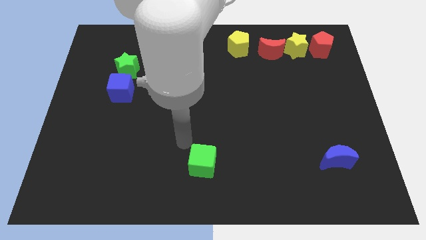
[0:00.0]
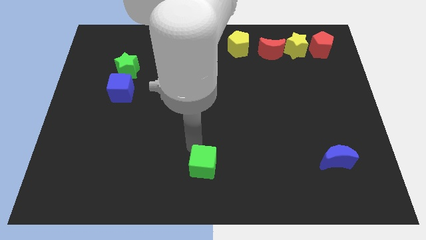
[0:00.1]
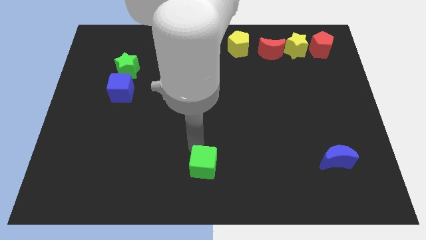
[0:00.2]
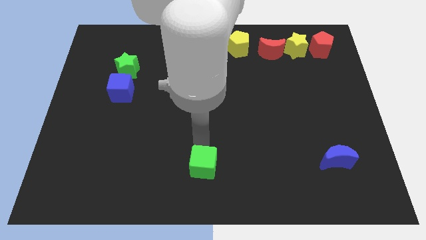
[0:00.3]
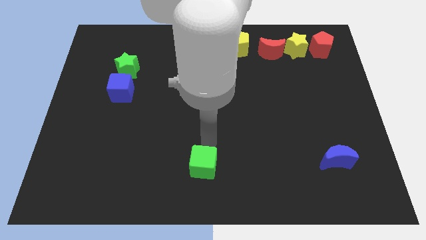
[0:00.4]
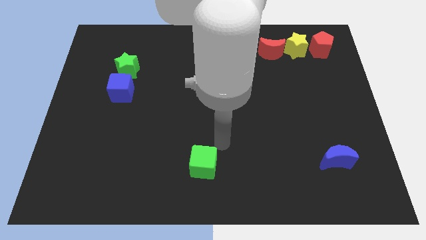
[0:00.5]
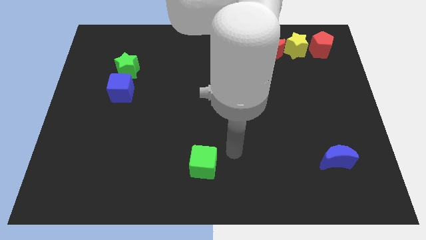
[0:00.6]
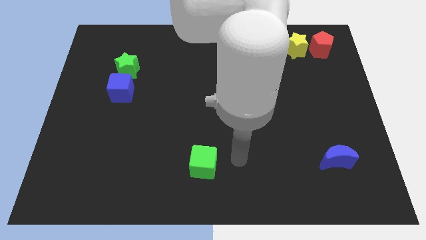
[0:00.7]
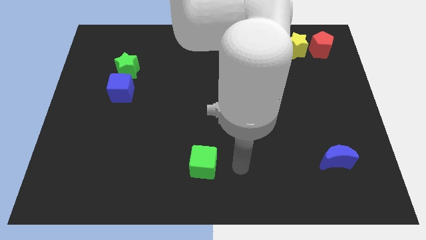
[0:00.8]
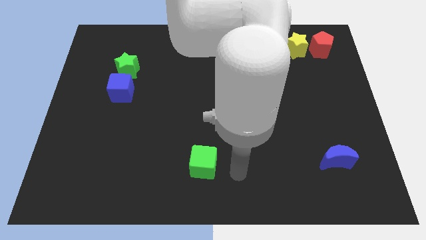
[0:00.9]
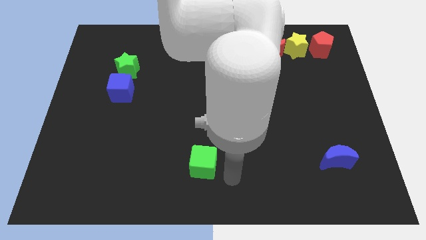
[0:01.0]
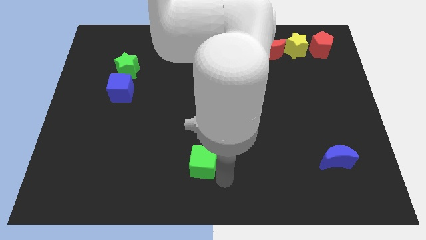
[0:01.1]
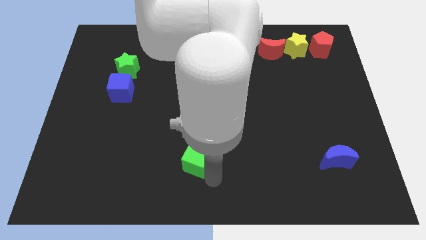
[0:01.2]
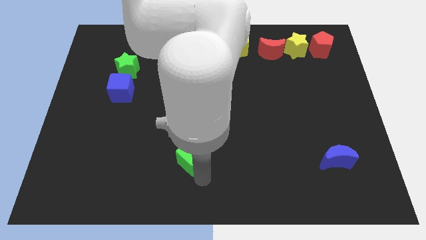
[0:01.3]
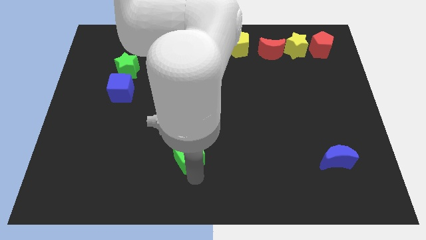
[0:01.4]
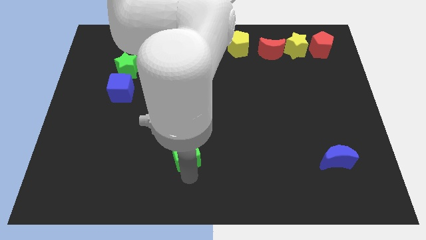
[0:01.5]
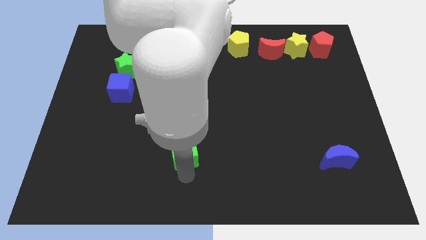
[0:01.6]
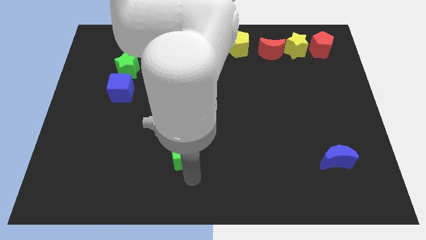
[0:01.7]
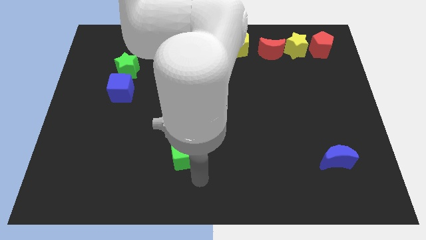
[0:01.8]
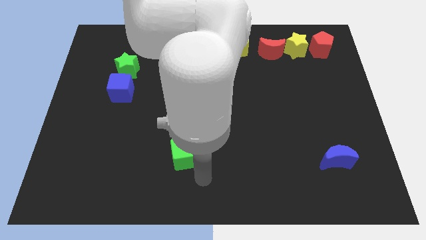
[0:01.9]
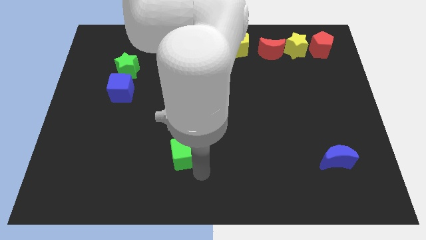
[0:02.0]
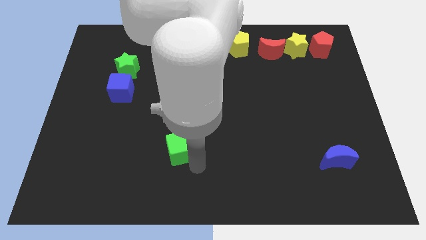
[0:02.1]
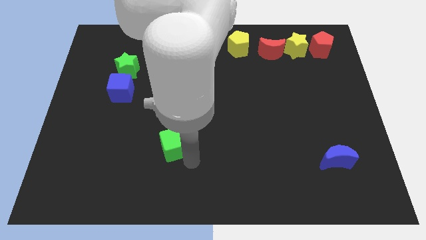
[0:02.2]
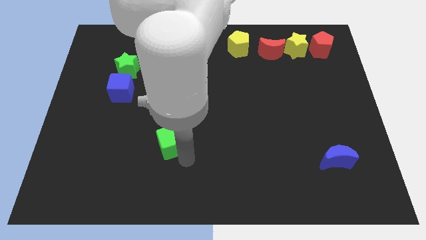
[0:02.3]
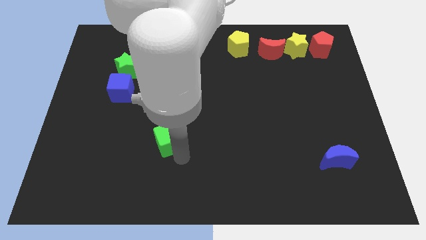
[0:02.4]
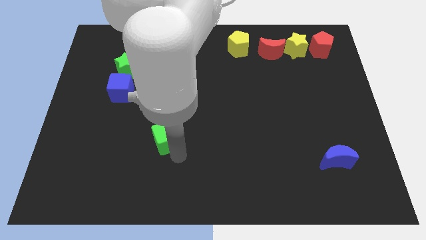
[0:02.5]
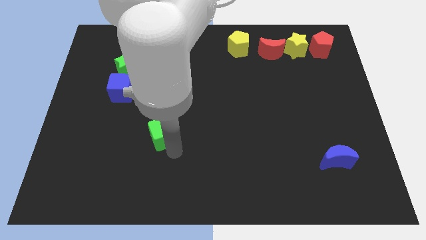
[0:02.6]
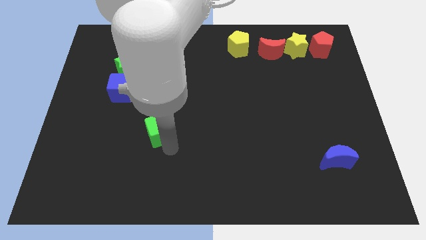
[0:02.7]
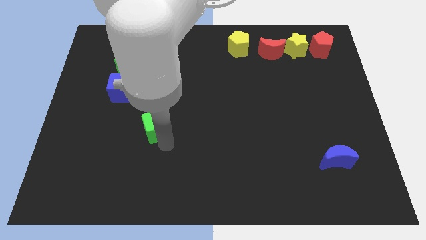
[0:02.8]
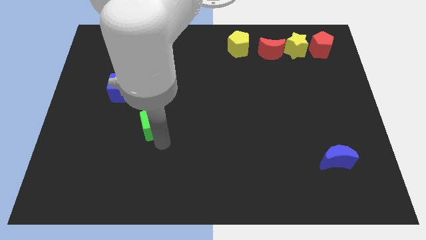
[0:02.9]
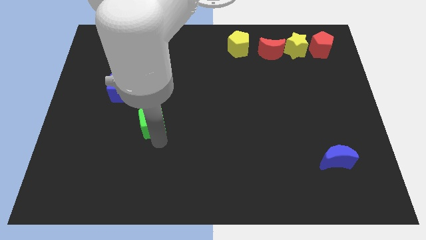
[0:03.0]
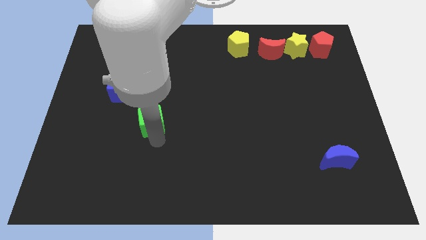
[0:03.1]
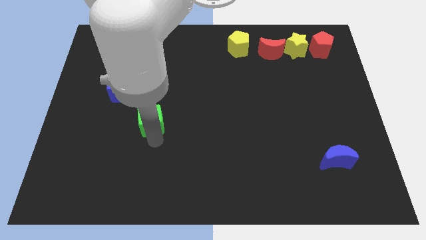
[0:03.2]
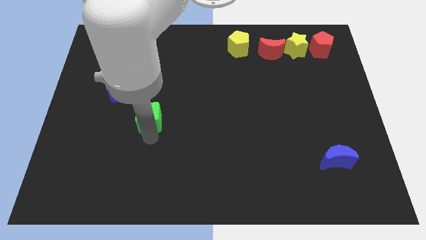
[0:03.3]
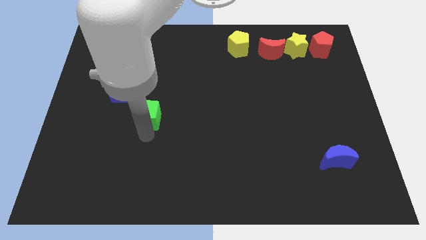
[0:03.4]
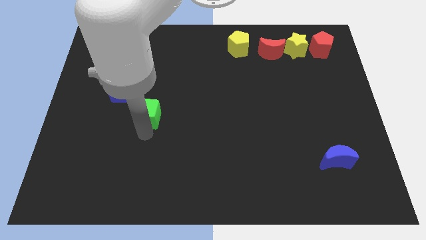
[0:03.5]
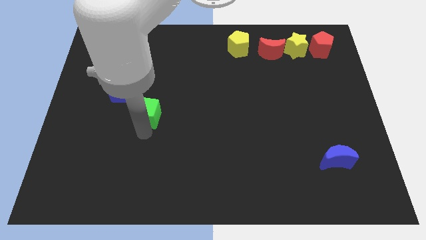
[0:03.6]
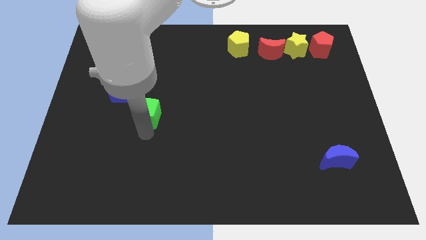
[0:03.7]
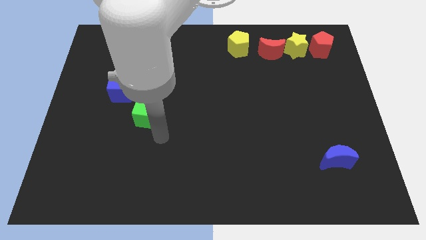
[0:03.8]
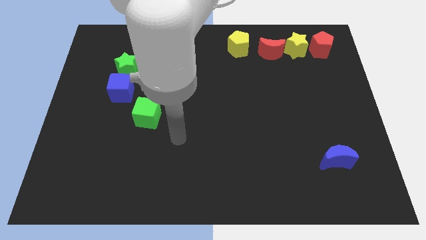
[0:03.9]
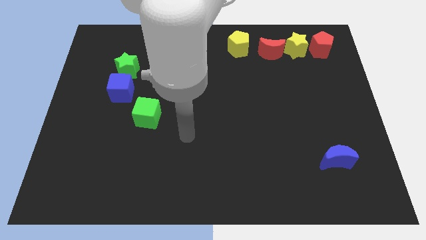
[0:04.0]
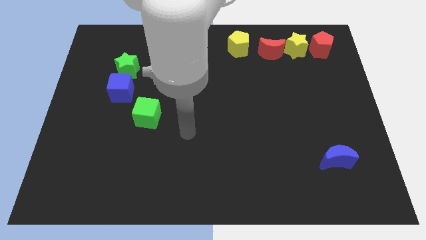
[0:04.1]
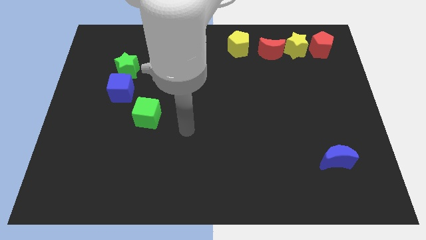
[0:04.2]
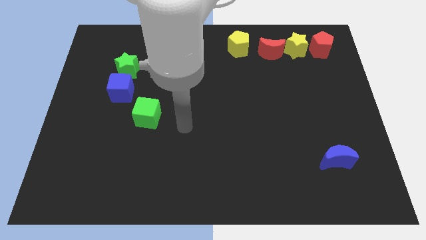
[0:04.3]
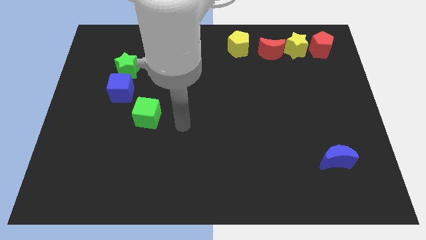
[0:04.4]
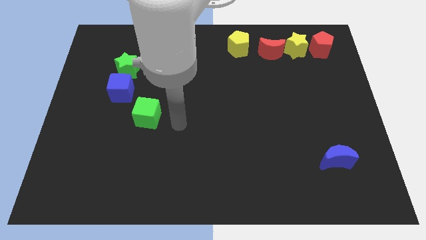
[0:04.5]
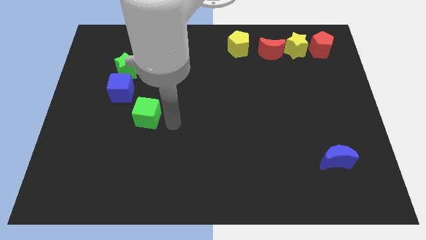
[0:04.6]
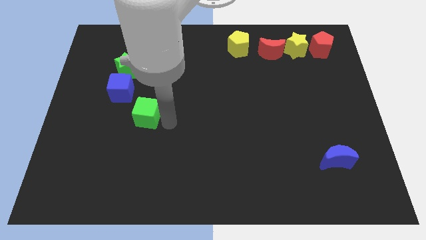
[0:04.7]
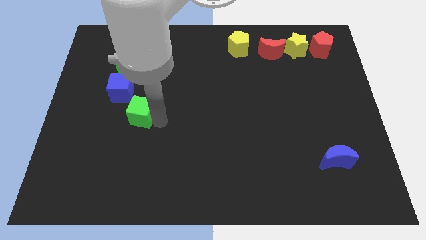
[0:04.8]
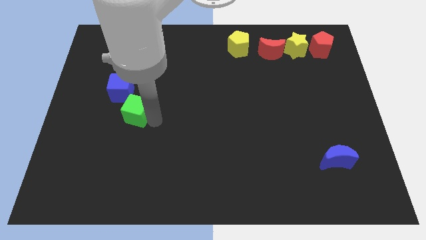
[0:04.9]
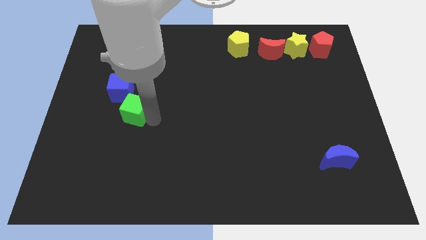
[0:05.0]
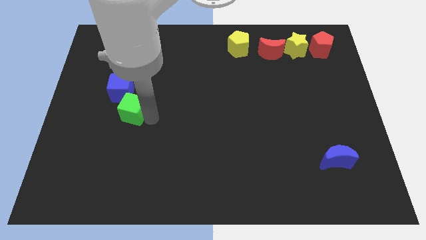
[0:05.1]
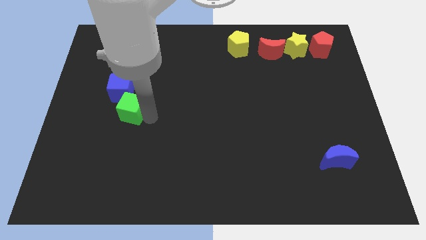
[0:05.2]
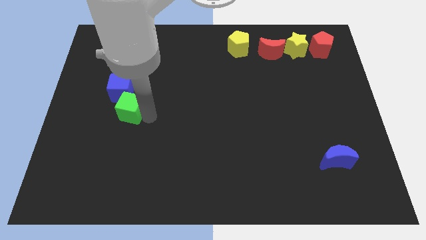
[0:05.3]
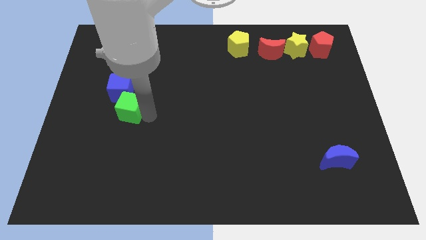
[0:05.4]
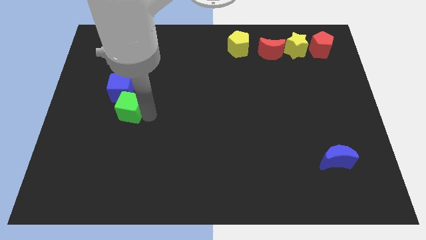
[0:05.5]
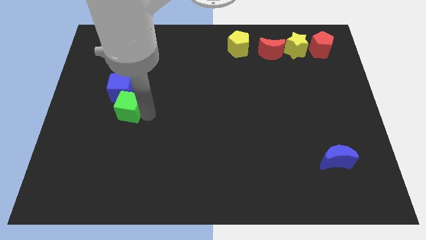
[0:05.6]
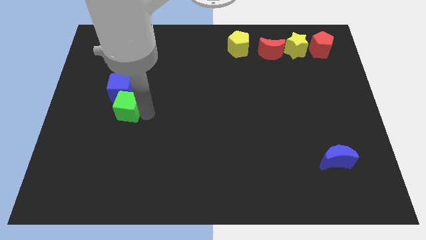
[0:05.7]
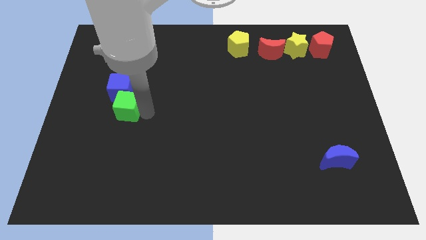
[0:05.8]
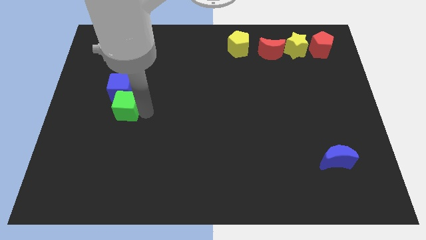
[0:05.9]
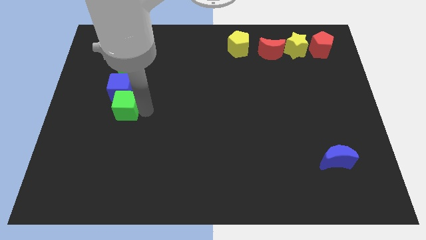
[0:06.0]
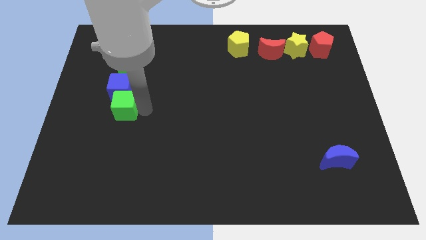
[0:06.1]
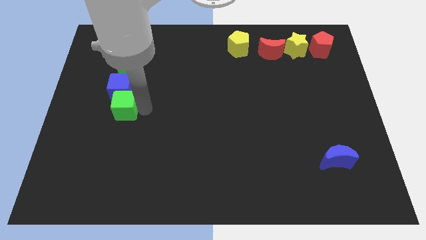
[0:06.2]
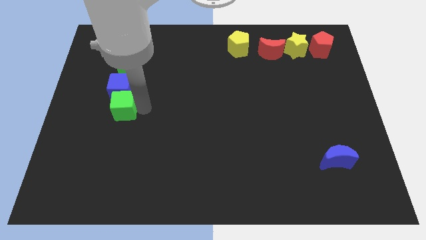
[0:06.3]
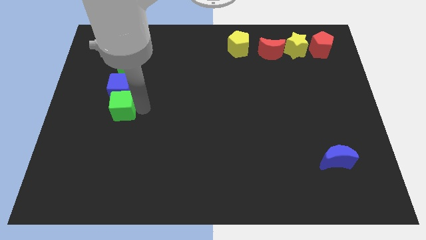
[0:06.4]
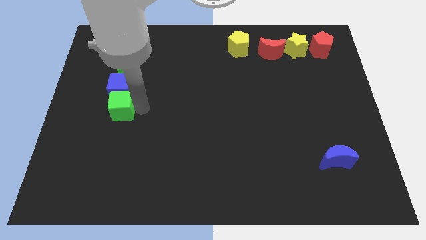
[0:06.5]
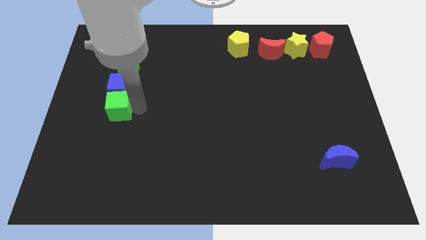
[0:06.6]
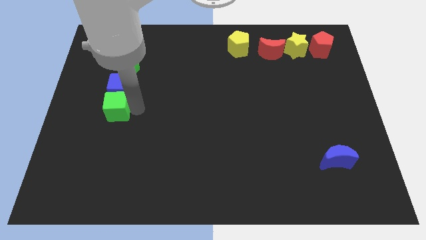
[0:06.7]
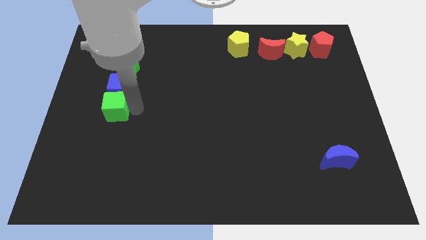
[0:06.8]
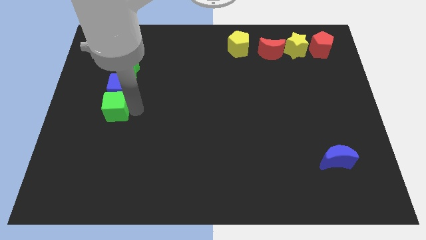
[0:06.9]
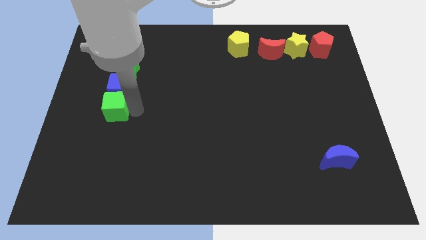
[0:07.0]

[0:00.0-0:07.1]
push the blue cube into the bottom side of the blue cube

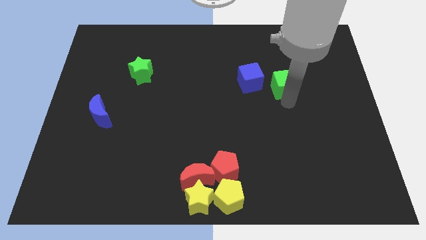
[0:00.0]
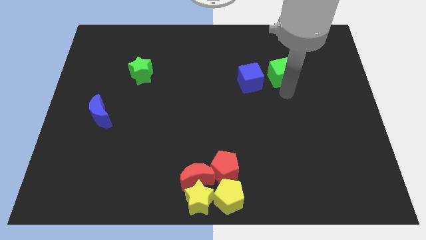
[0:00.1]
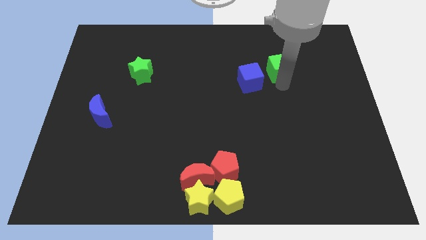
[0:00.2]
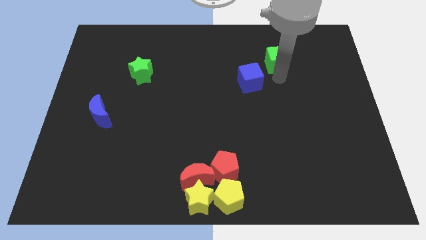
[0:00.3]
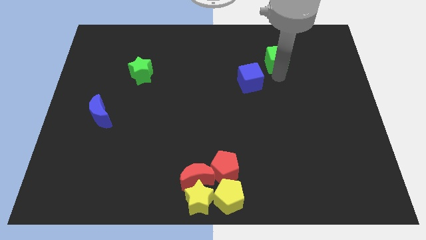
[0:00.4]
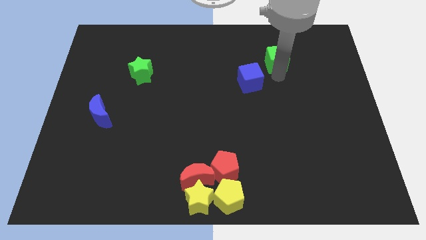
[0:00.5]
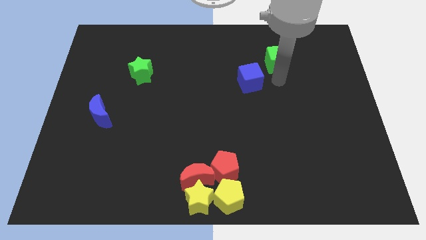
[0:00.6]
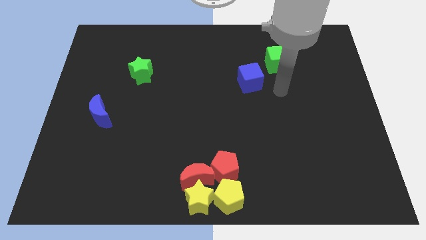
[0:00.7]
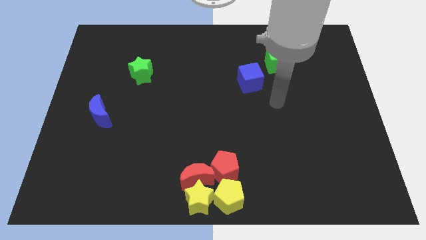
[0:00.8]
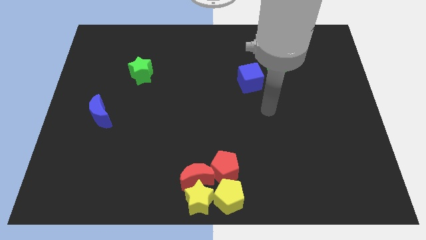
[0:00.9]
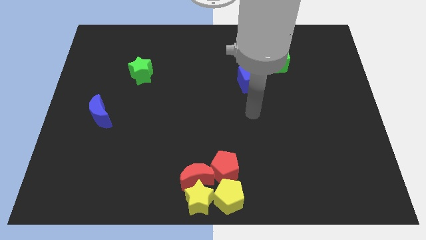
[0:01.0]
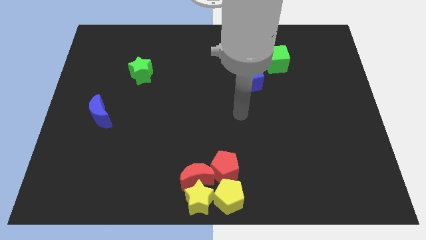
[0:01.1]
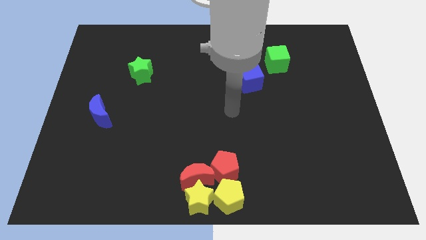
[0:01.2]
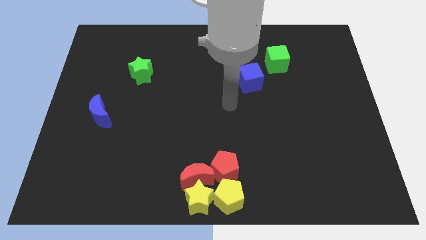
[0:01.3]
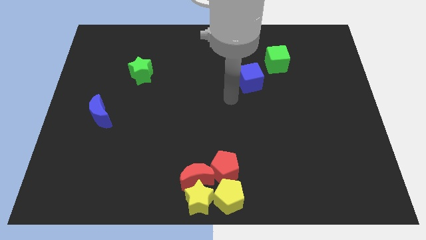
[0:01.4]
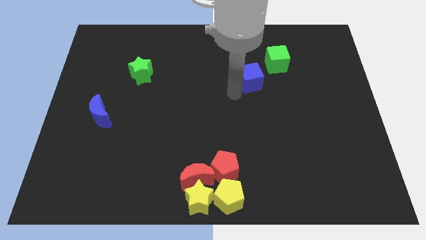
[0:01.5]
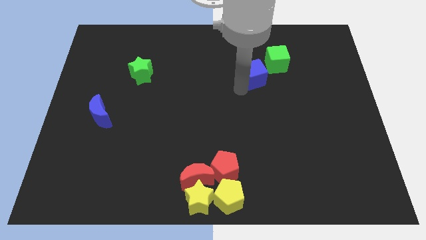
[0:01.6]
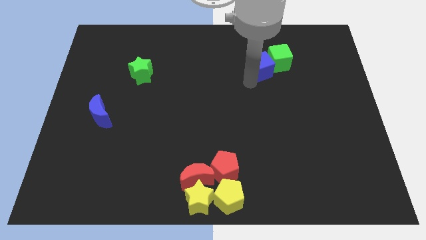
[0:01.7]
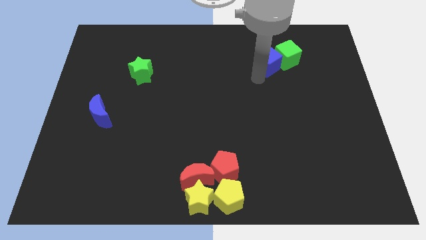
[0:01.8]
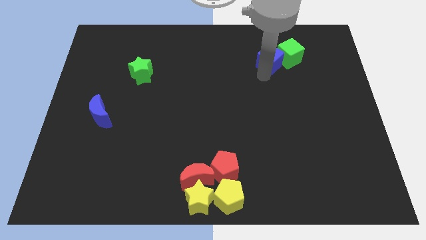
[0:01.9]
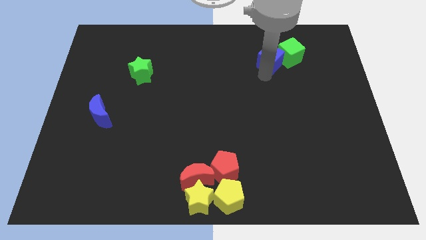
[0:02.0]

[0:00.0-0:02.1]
slide both the cubes towards the top right side of the board
